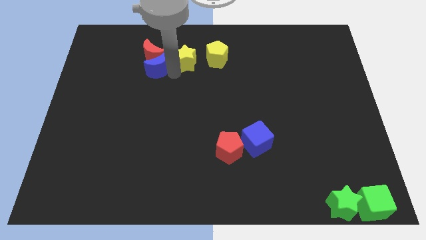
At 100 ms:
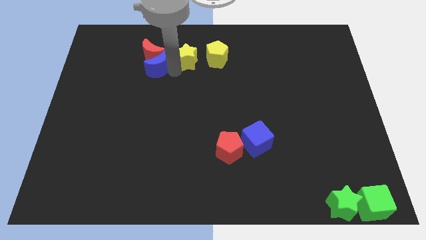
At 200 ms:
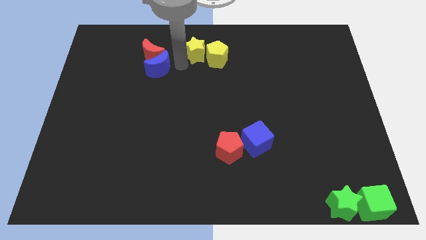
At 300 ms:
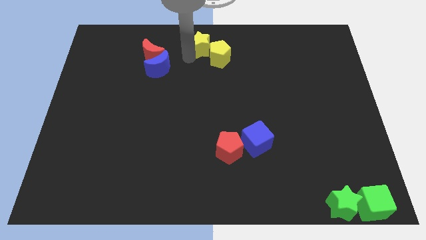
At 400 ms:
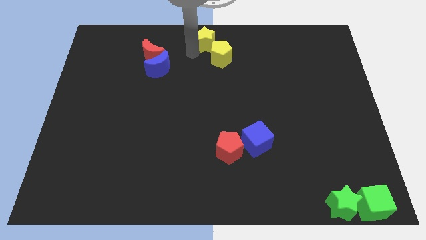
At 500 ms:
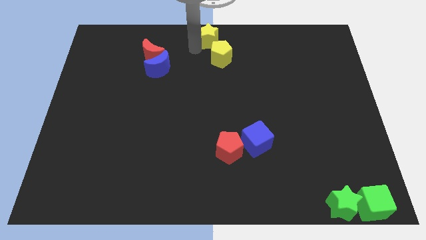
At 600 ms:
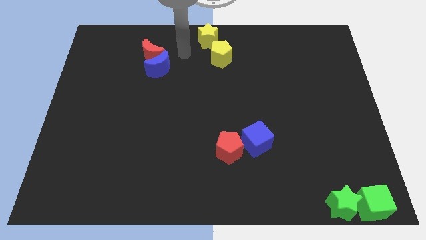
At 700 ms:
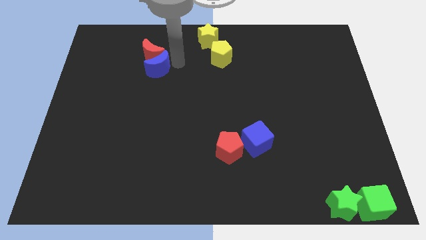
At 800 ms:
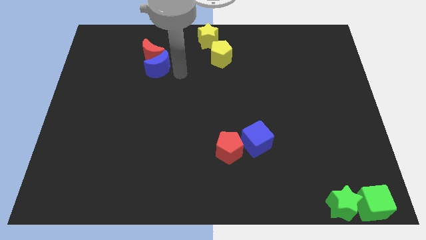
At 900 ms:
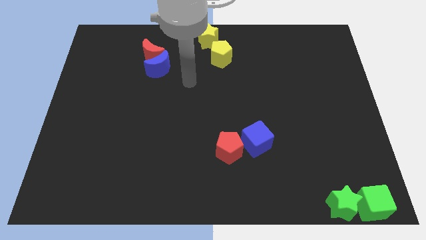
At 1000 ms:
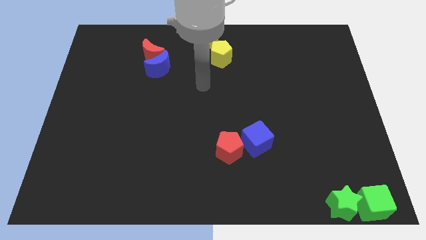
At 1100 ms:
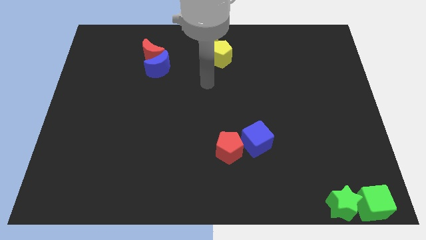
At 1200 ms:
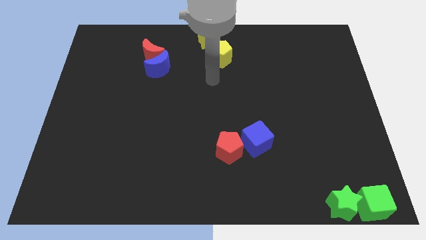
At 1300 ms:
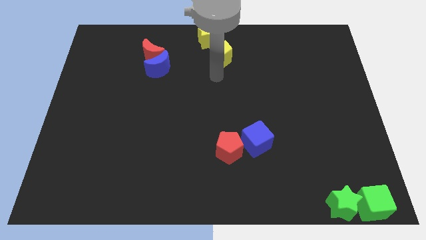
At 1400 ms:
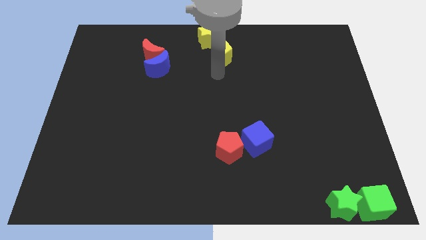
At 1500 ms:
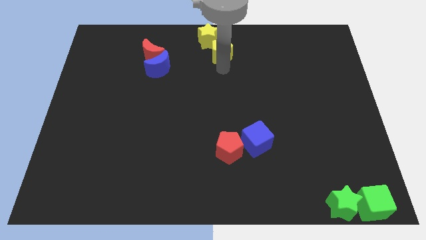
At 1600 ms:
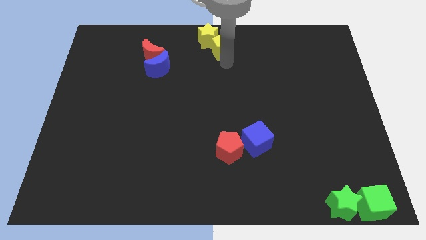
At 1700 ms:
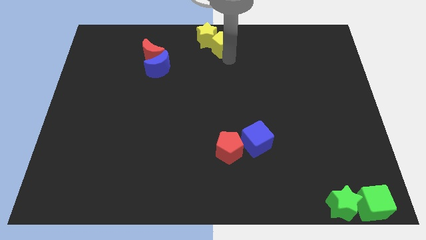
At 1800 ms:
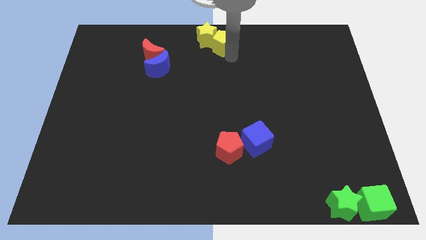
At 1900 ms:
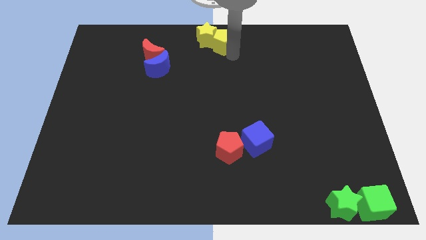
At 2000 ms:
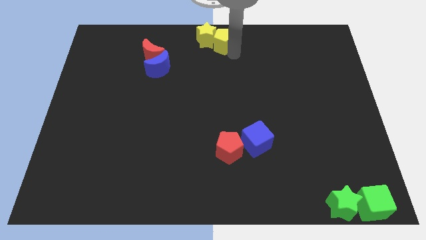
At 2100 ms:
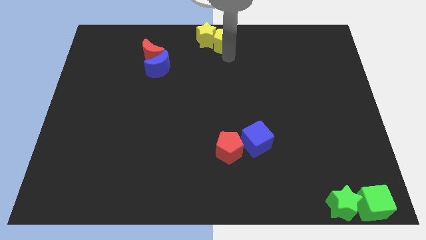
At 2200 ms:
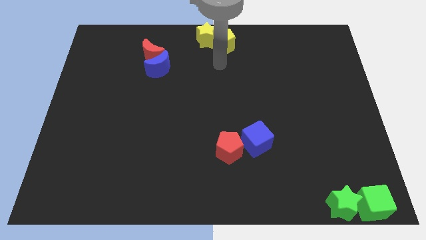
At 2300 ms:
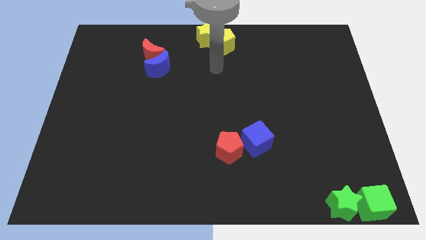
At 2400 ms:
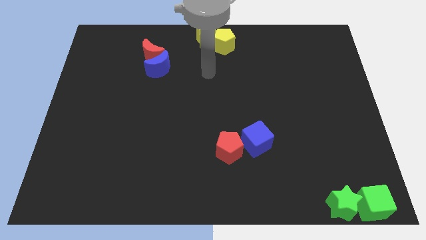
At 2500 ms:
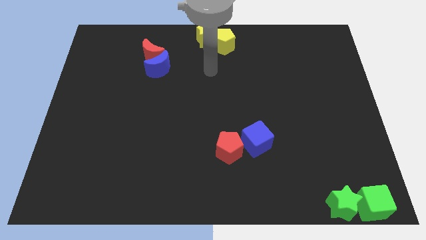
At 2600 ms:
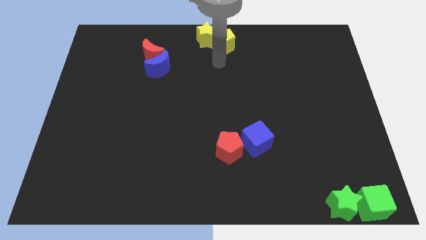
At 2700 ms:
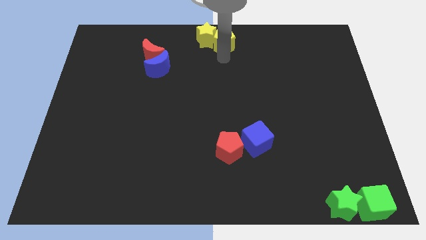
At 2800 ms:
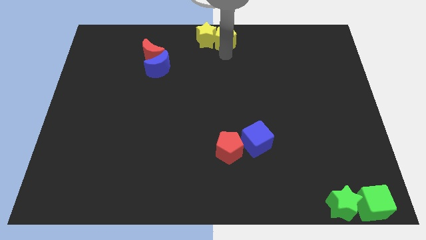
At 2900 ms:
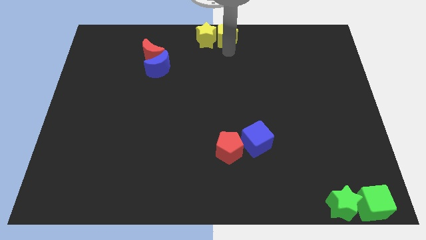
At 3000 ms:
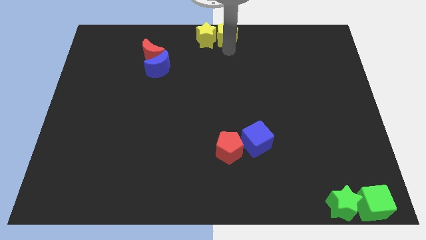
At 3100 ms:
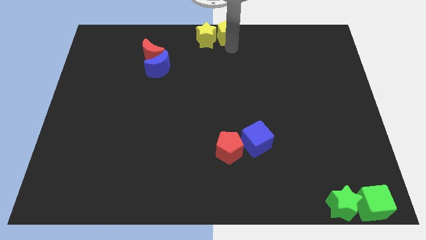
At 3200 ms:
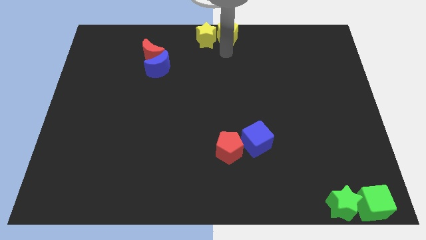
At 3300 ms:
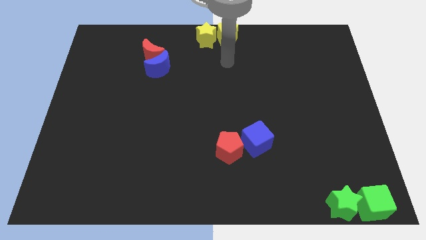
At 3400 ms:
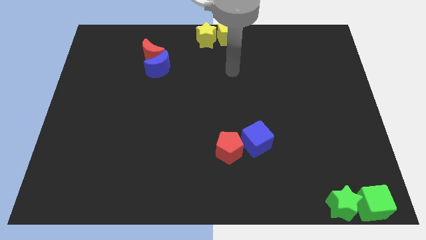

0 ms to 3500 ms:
place the group of yellow blocks at the top center of the board

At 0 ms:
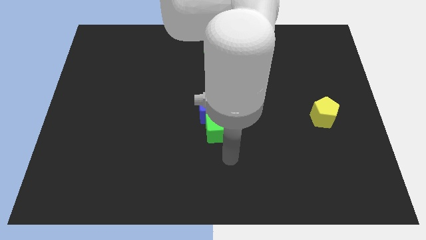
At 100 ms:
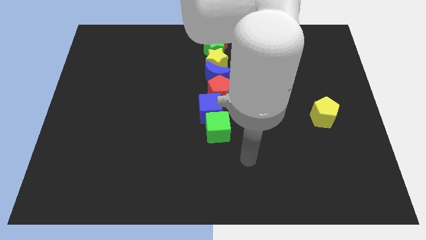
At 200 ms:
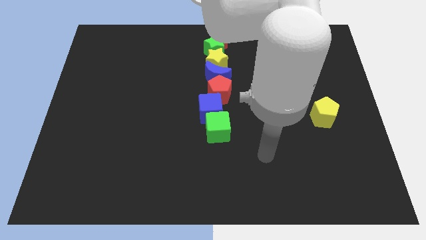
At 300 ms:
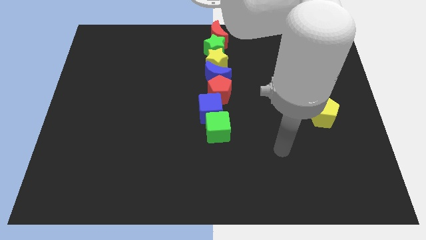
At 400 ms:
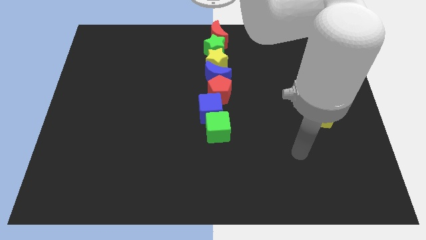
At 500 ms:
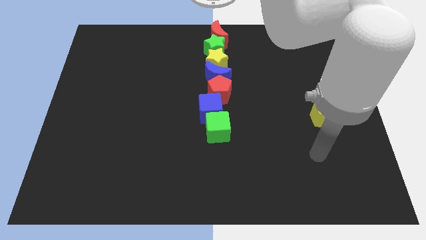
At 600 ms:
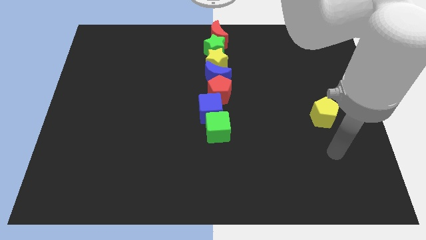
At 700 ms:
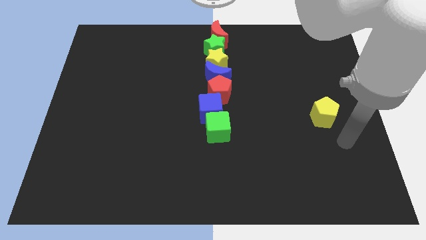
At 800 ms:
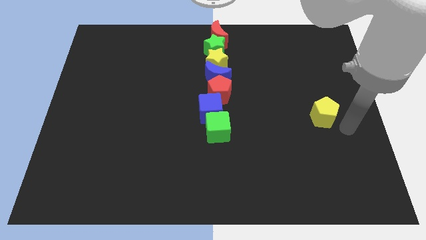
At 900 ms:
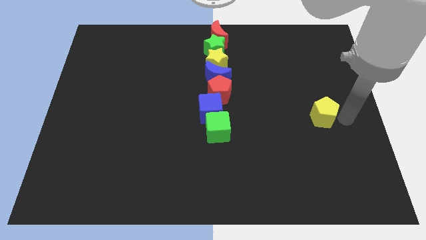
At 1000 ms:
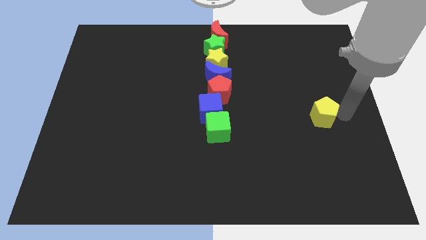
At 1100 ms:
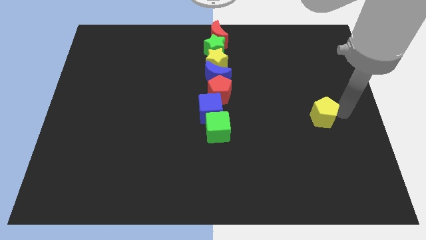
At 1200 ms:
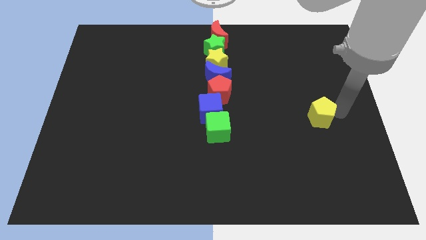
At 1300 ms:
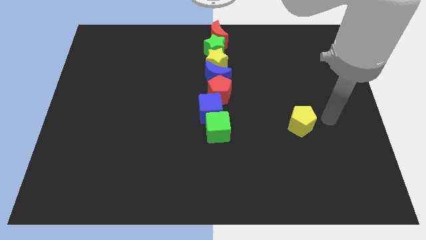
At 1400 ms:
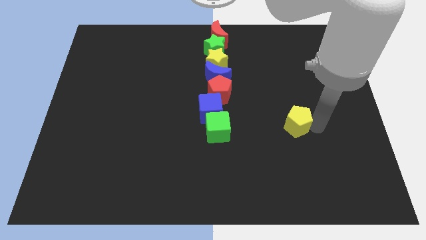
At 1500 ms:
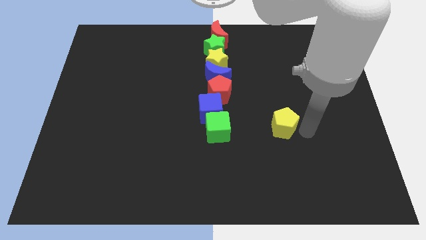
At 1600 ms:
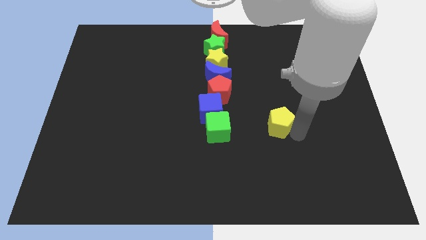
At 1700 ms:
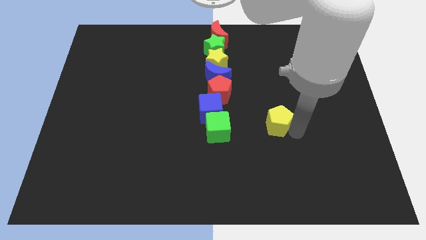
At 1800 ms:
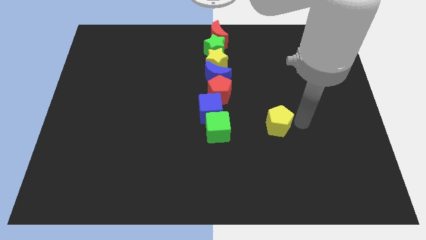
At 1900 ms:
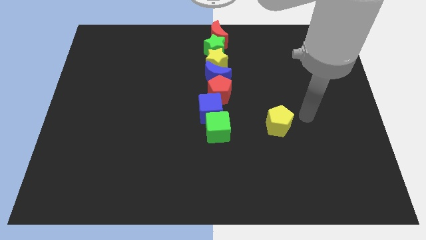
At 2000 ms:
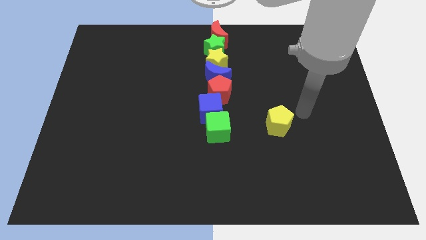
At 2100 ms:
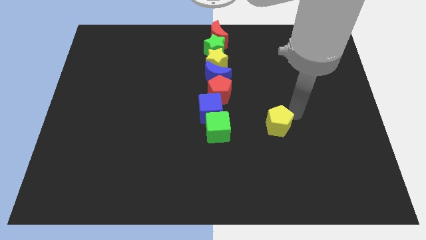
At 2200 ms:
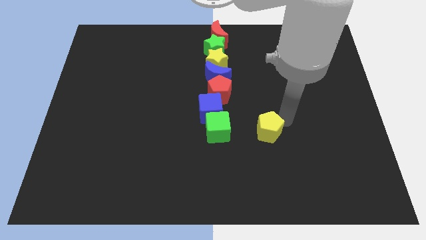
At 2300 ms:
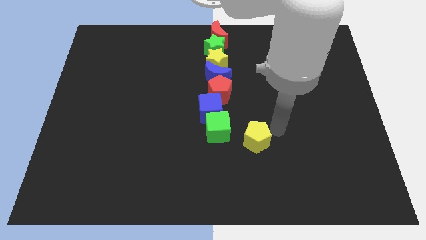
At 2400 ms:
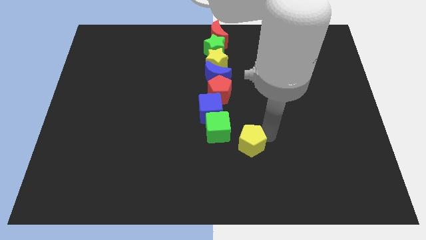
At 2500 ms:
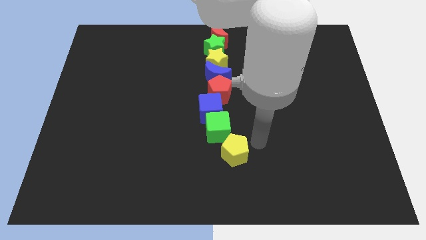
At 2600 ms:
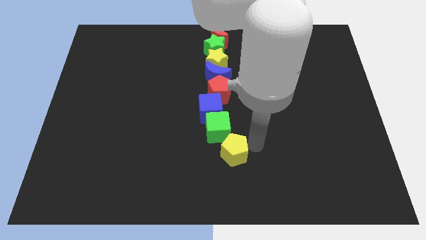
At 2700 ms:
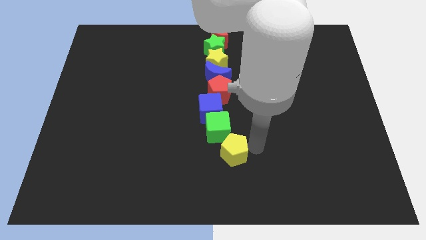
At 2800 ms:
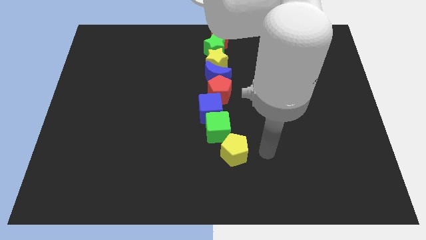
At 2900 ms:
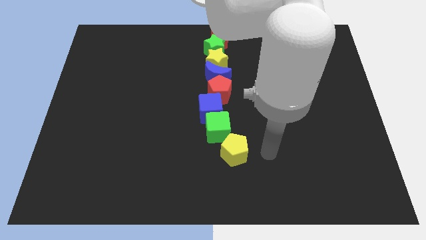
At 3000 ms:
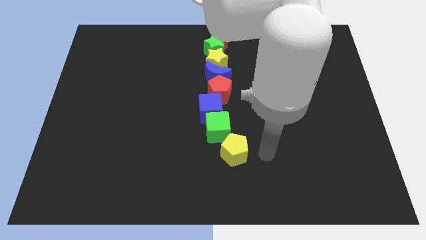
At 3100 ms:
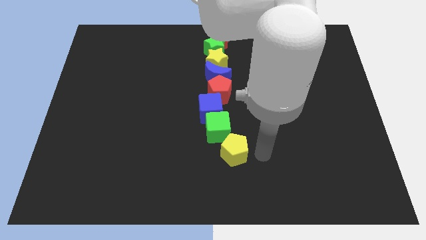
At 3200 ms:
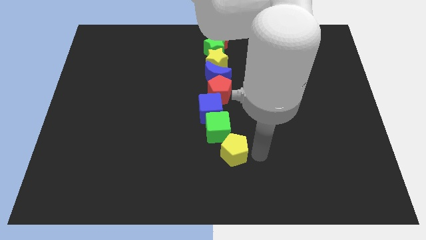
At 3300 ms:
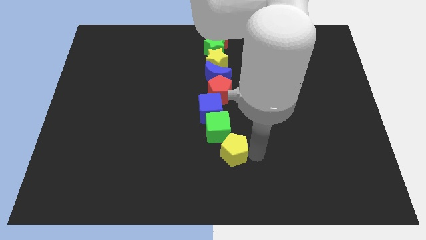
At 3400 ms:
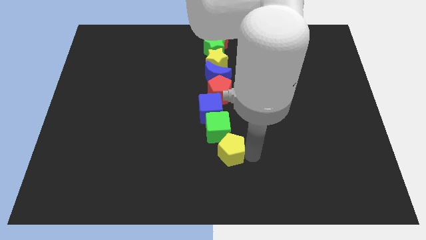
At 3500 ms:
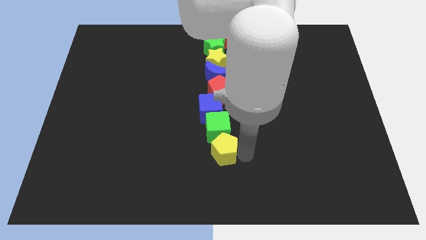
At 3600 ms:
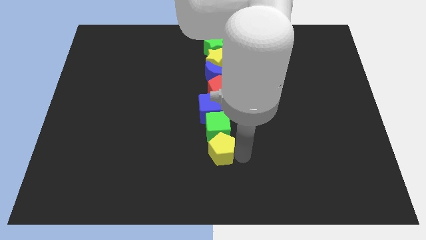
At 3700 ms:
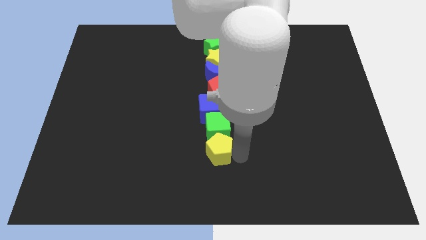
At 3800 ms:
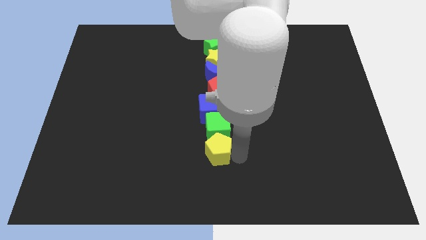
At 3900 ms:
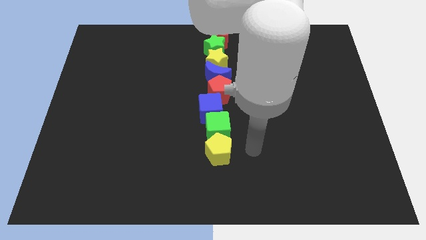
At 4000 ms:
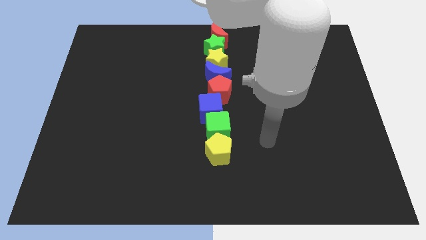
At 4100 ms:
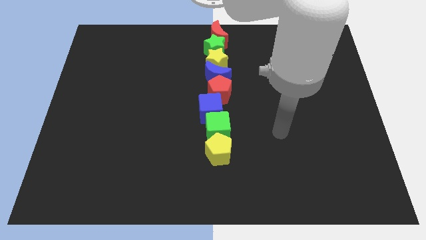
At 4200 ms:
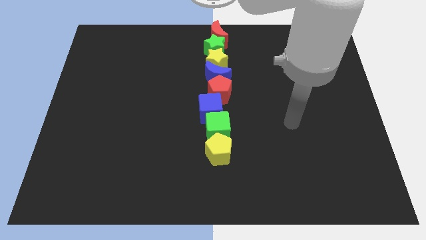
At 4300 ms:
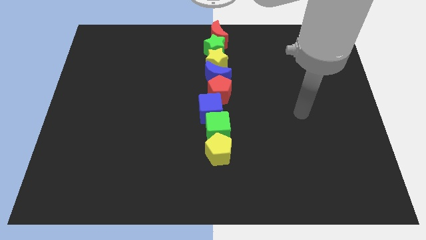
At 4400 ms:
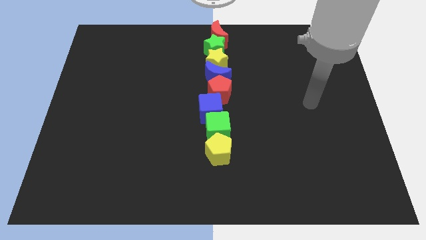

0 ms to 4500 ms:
put the yellow pentagon below the green cube

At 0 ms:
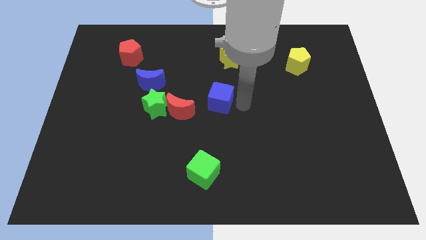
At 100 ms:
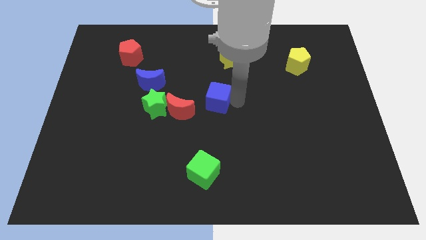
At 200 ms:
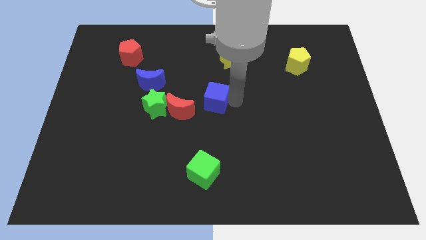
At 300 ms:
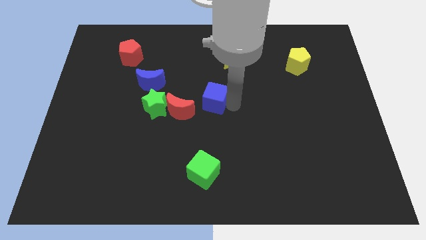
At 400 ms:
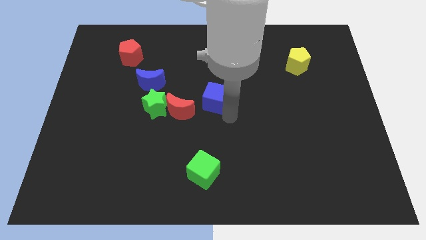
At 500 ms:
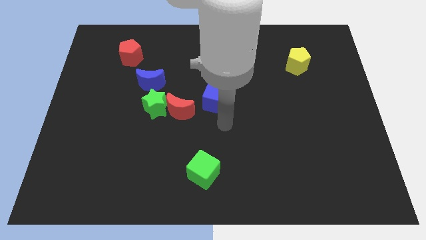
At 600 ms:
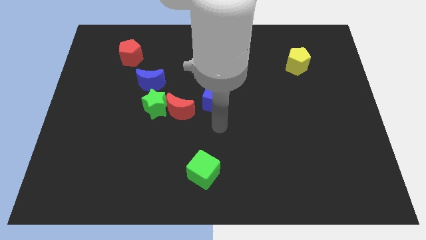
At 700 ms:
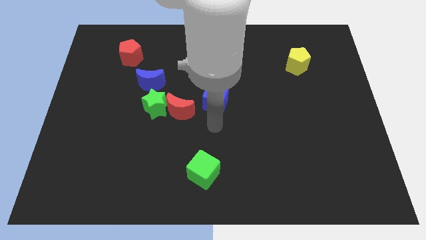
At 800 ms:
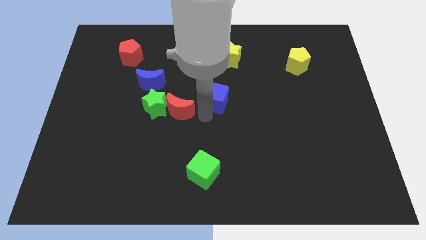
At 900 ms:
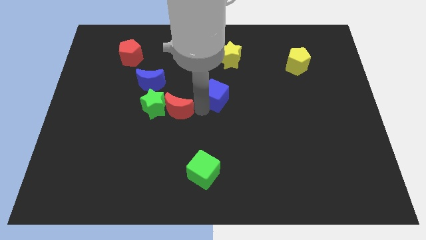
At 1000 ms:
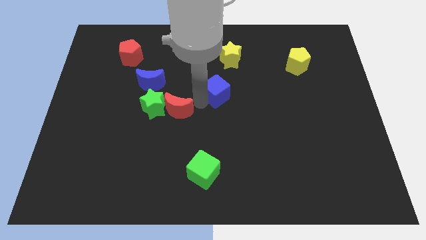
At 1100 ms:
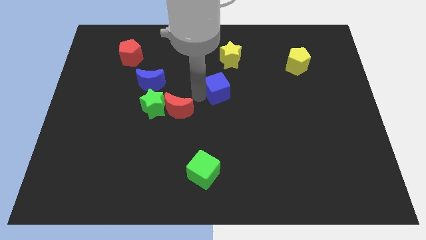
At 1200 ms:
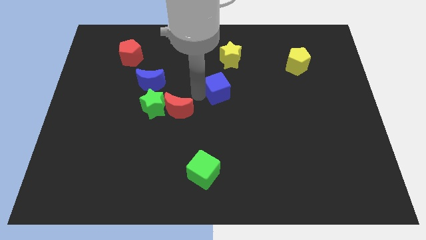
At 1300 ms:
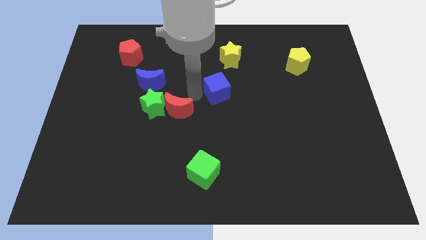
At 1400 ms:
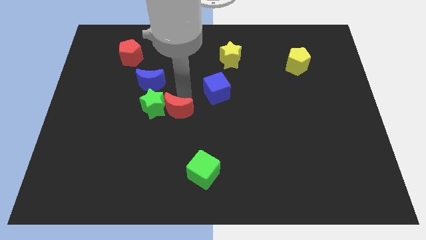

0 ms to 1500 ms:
move the arm over red crescent
